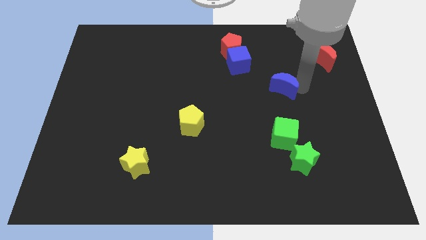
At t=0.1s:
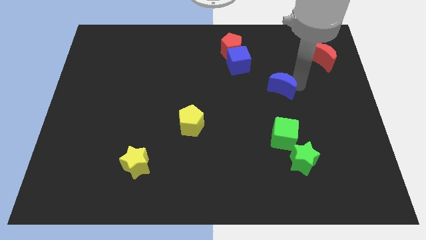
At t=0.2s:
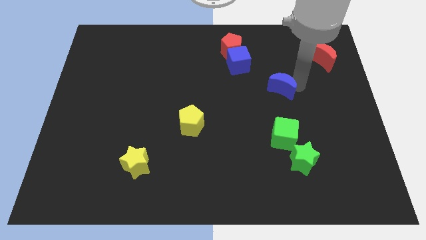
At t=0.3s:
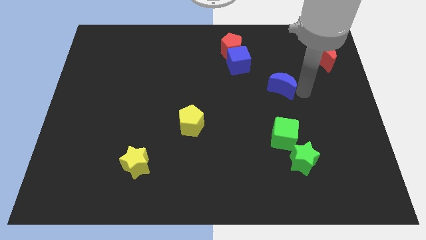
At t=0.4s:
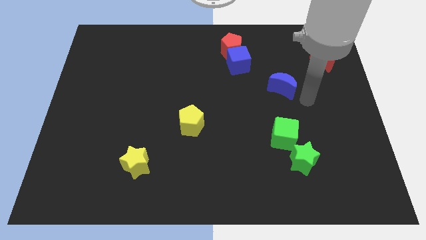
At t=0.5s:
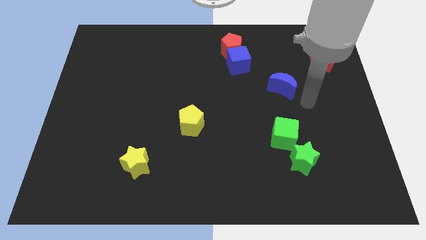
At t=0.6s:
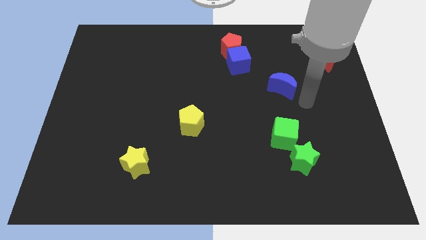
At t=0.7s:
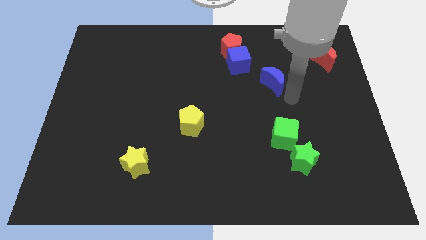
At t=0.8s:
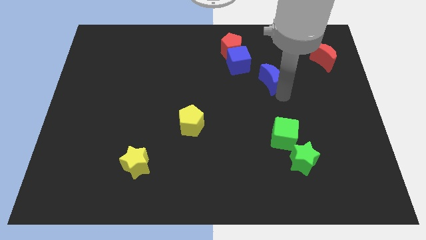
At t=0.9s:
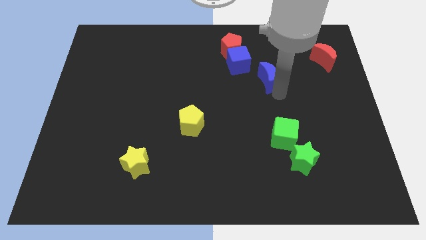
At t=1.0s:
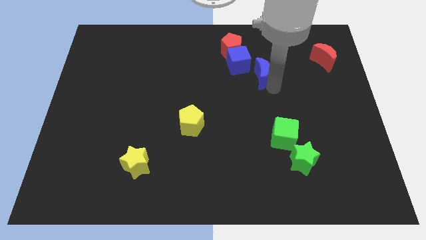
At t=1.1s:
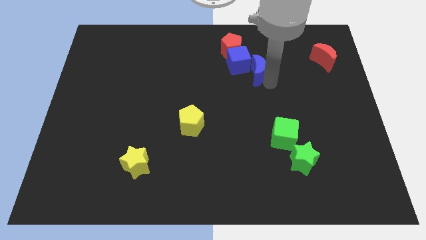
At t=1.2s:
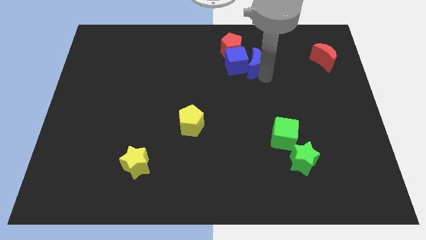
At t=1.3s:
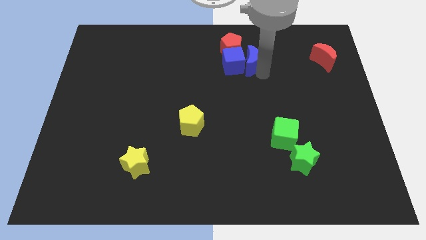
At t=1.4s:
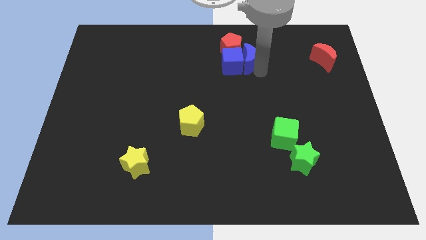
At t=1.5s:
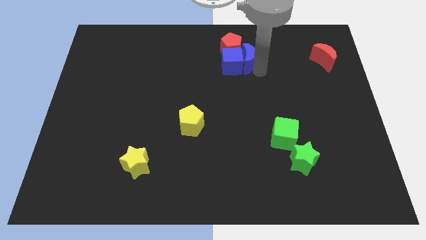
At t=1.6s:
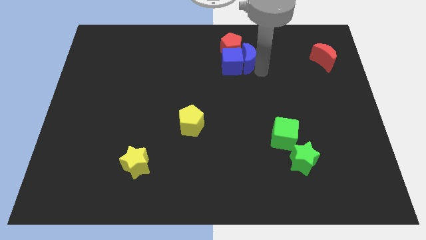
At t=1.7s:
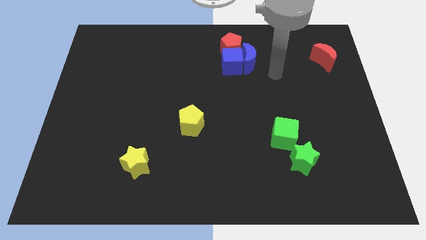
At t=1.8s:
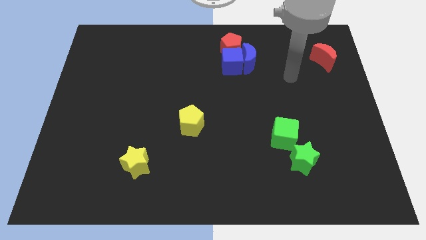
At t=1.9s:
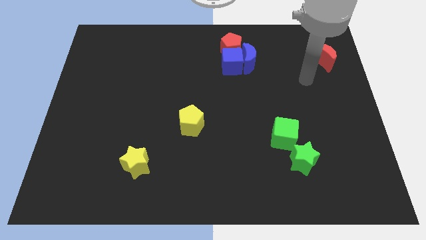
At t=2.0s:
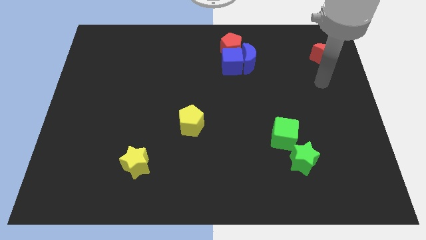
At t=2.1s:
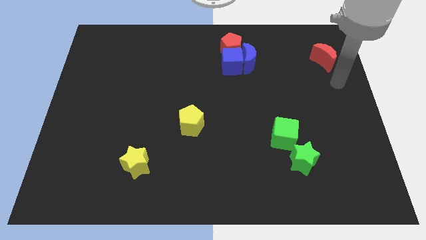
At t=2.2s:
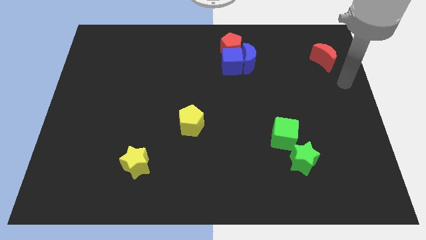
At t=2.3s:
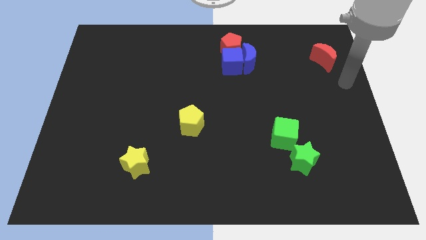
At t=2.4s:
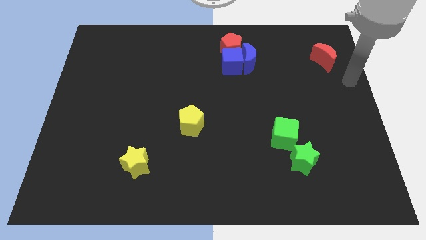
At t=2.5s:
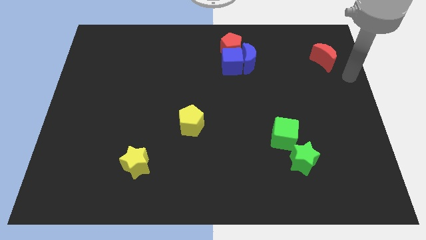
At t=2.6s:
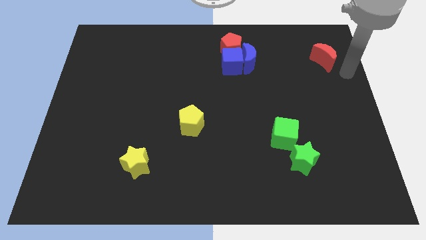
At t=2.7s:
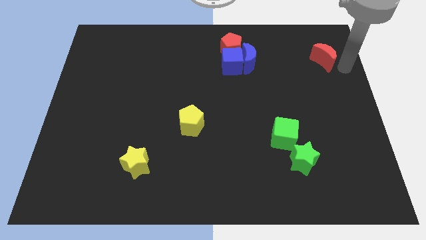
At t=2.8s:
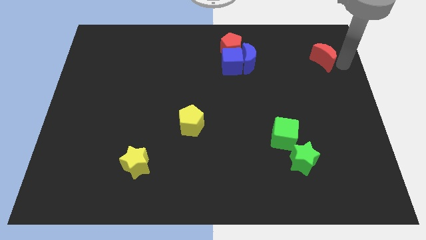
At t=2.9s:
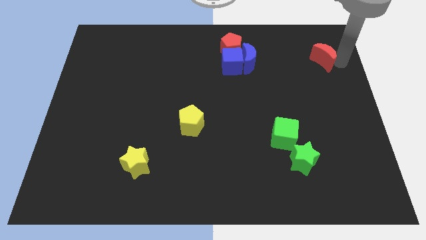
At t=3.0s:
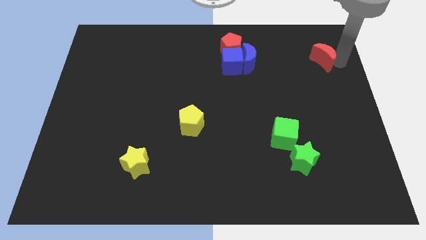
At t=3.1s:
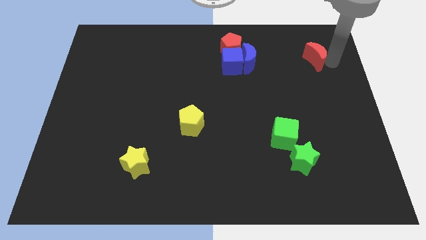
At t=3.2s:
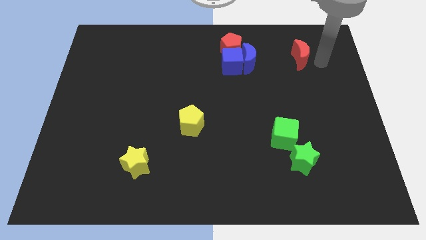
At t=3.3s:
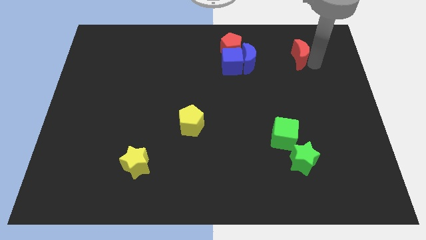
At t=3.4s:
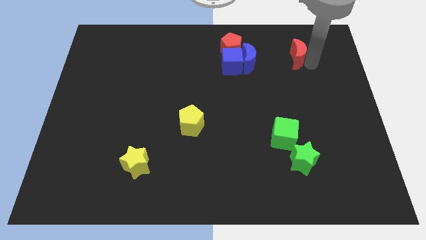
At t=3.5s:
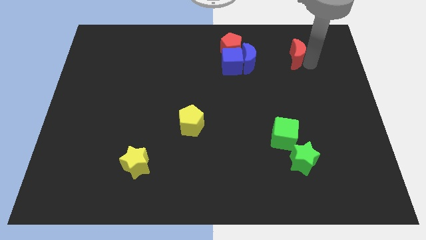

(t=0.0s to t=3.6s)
push the blue moon into blue cube

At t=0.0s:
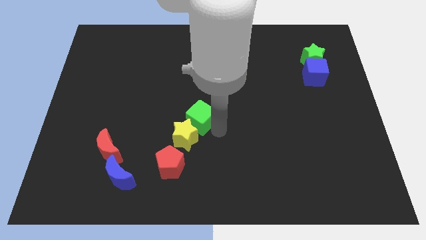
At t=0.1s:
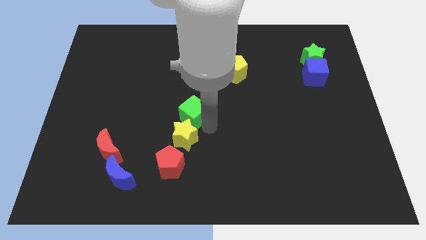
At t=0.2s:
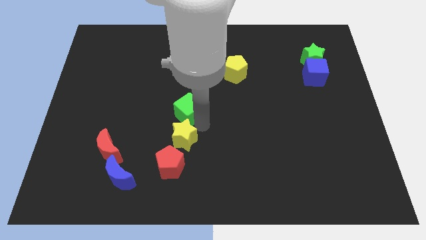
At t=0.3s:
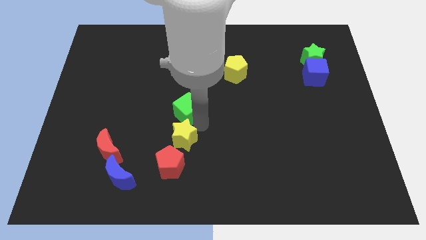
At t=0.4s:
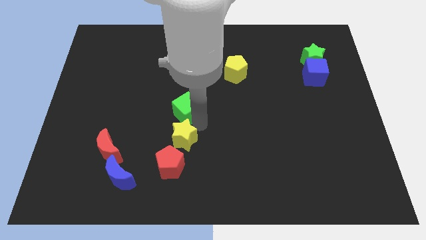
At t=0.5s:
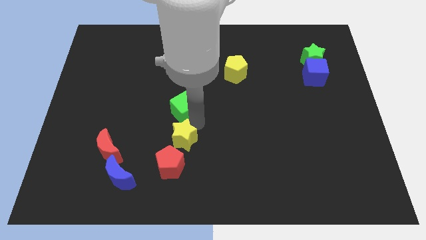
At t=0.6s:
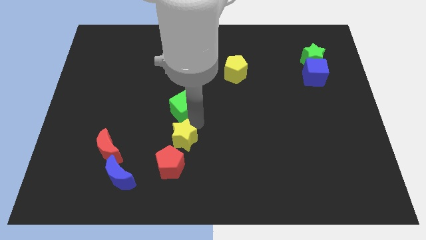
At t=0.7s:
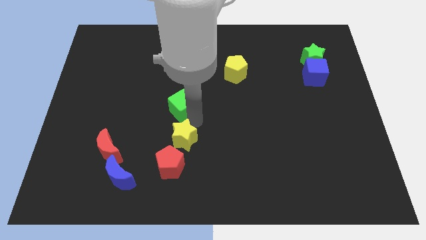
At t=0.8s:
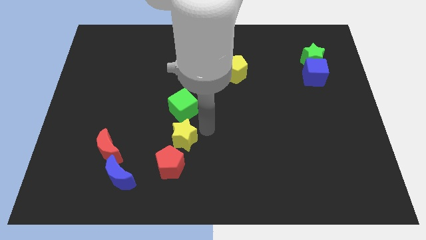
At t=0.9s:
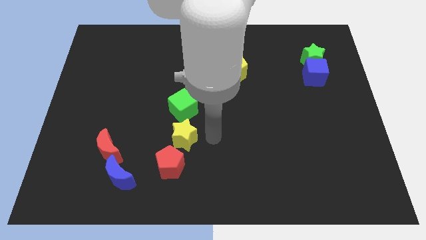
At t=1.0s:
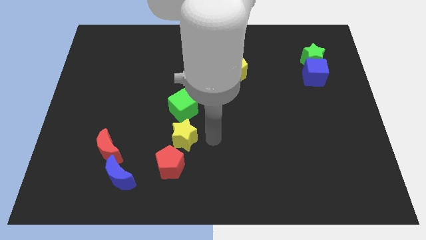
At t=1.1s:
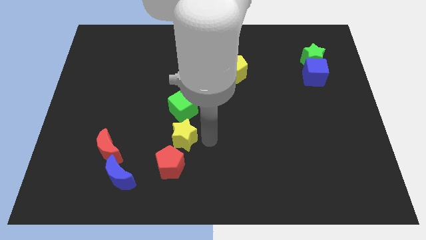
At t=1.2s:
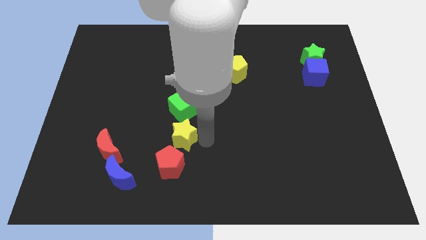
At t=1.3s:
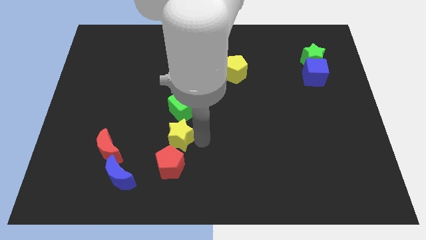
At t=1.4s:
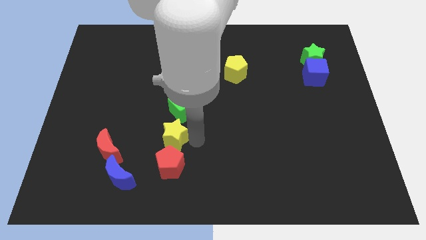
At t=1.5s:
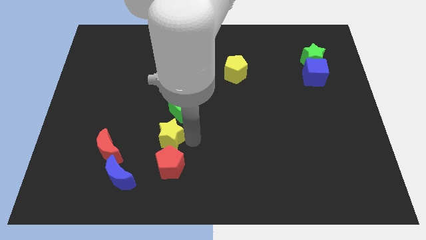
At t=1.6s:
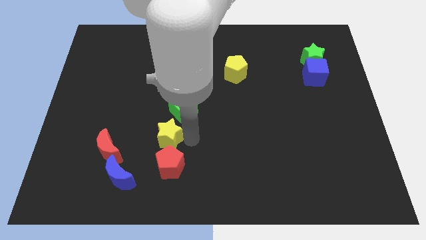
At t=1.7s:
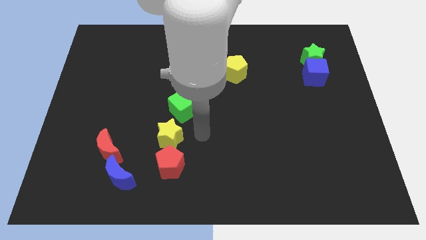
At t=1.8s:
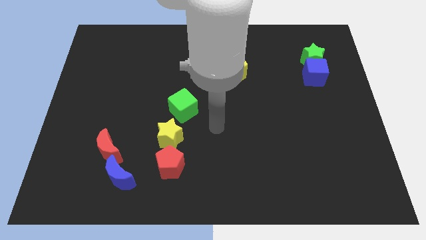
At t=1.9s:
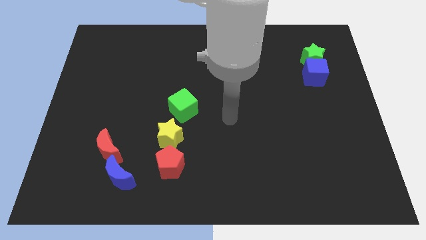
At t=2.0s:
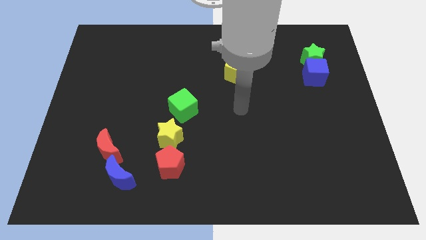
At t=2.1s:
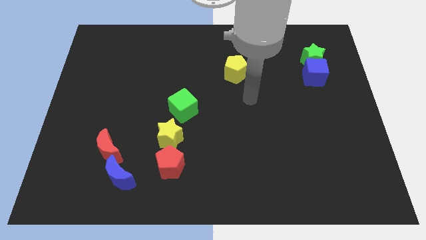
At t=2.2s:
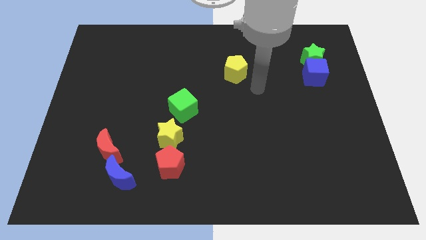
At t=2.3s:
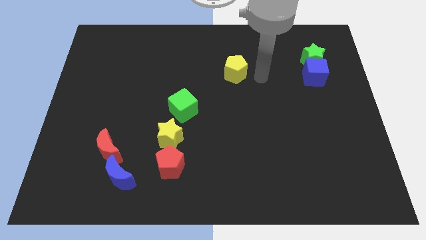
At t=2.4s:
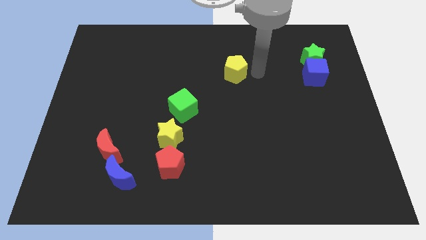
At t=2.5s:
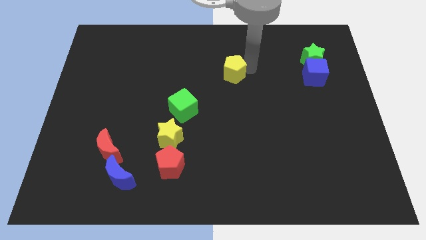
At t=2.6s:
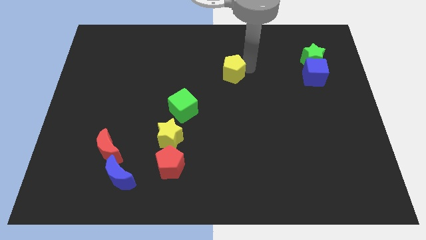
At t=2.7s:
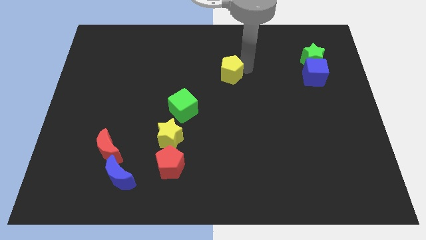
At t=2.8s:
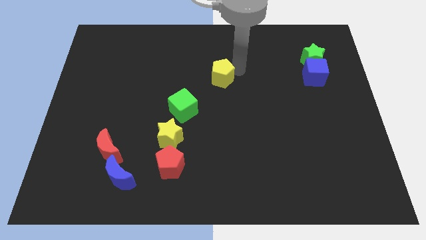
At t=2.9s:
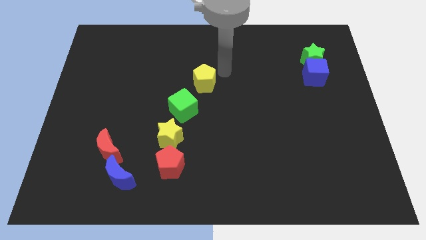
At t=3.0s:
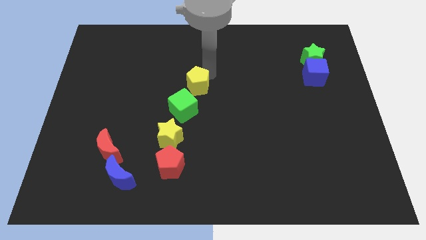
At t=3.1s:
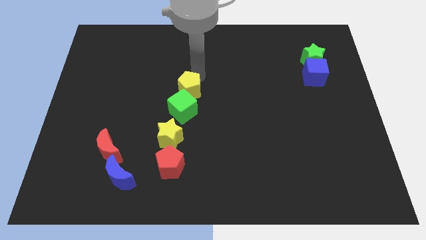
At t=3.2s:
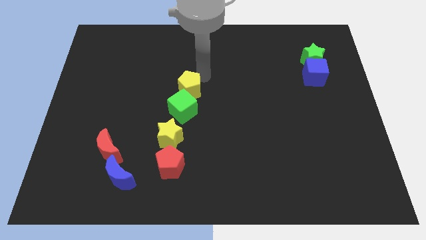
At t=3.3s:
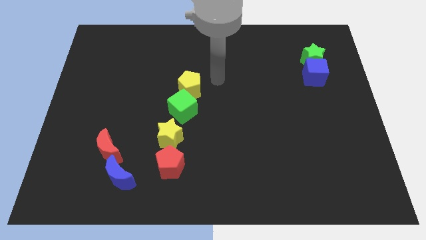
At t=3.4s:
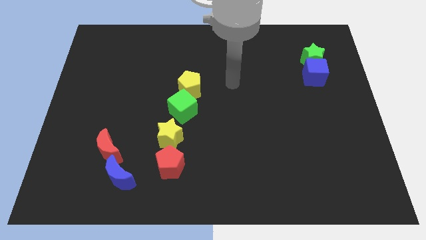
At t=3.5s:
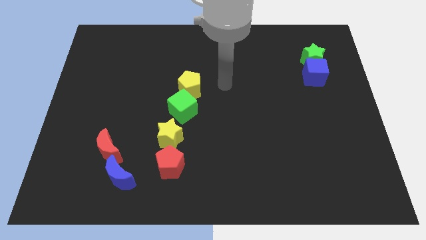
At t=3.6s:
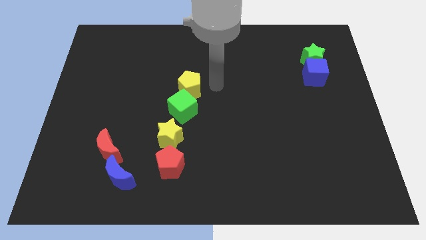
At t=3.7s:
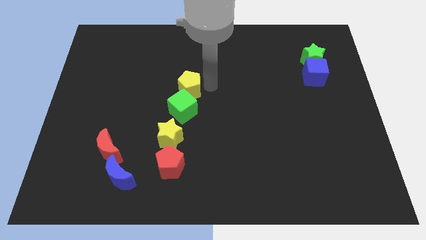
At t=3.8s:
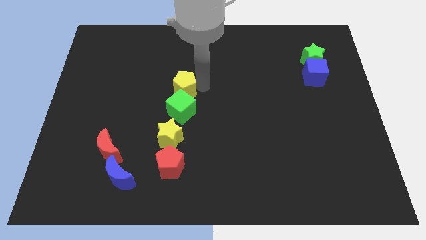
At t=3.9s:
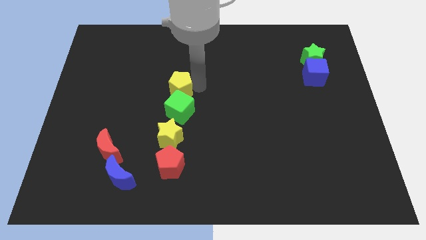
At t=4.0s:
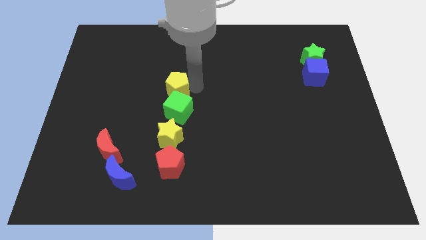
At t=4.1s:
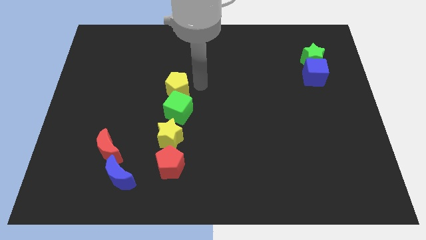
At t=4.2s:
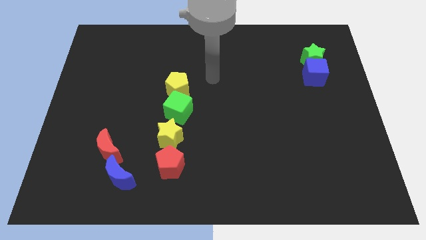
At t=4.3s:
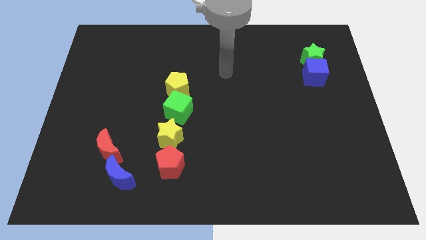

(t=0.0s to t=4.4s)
push the yellow pentagon into the green cube

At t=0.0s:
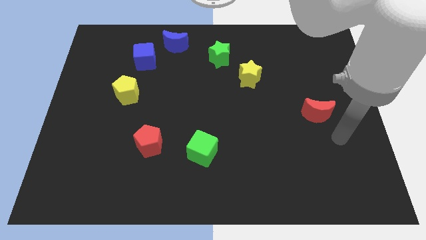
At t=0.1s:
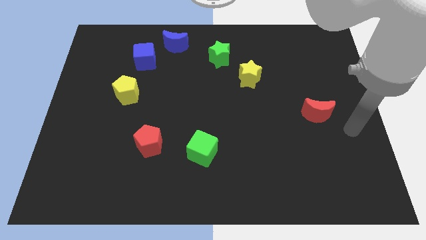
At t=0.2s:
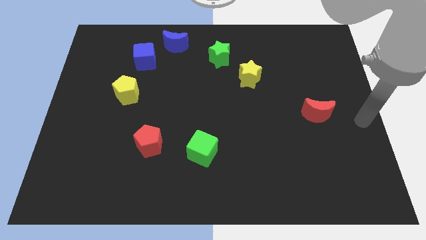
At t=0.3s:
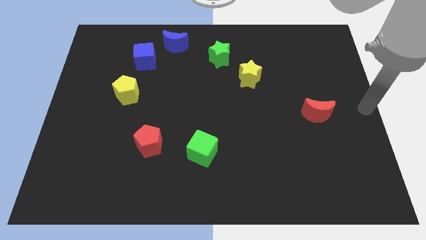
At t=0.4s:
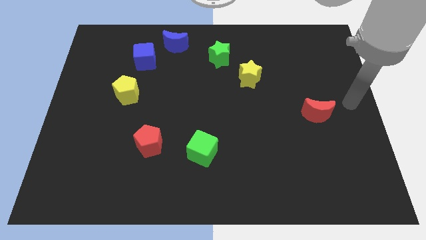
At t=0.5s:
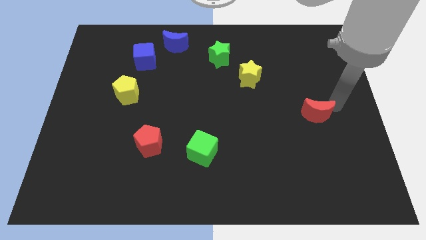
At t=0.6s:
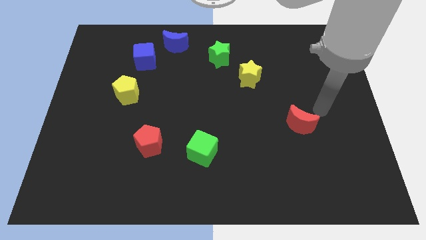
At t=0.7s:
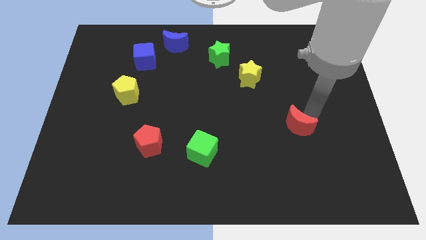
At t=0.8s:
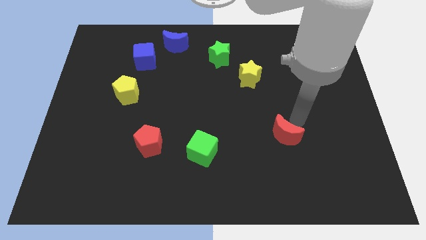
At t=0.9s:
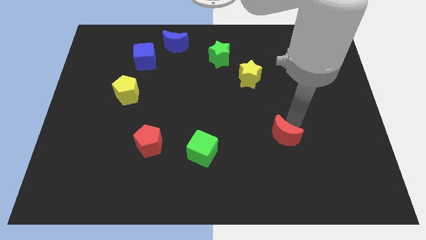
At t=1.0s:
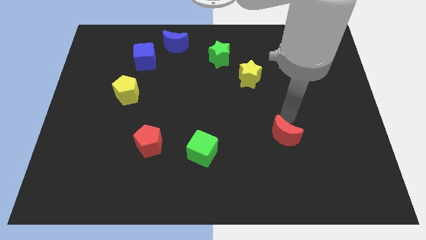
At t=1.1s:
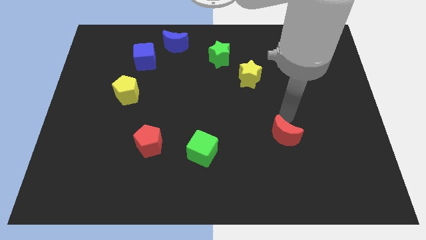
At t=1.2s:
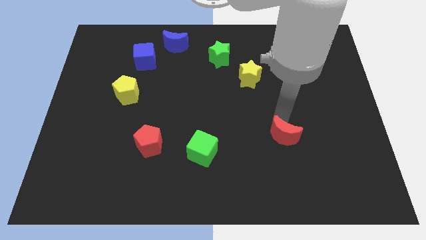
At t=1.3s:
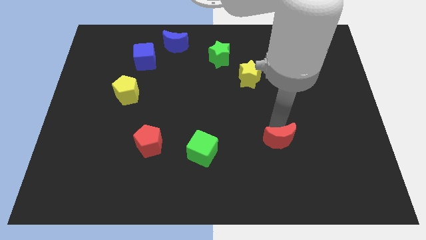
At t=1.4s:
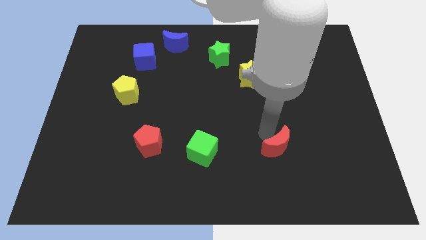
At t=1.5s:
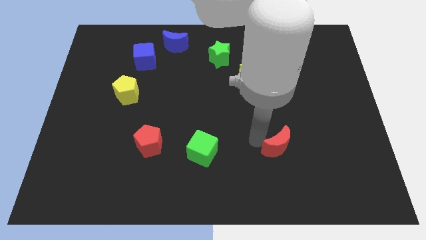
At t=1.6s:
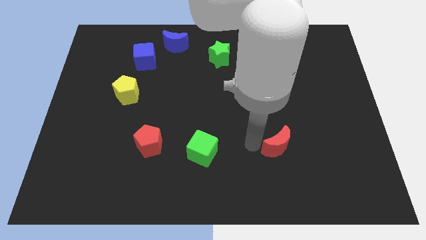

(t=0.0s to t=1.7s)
place the red crescent right of green cube
